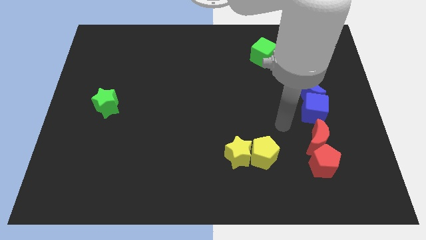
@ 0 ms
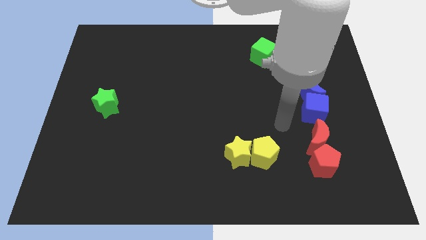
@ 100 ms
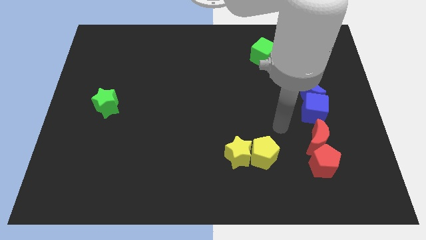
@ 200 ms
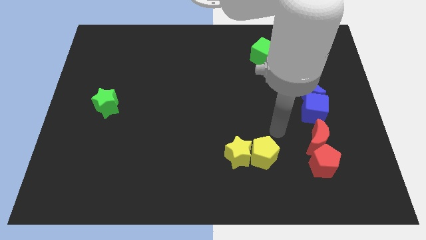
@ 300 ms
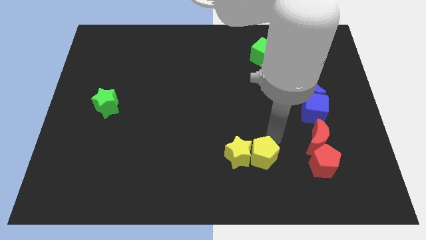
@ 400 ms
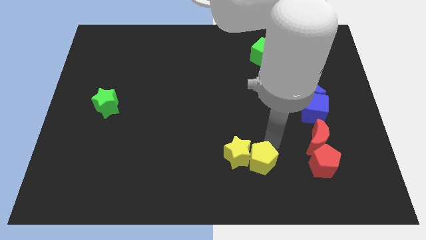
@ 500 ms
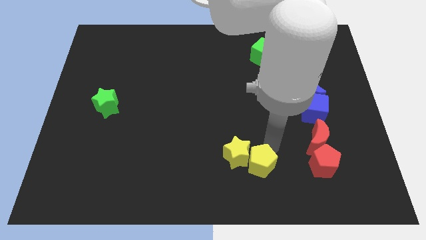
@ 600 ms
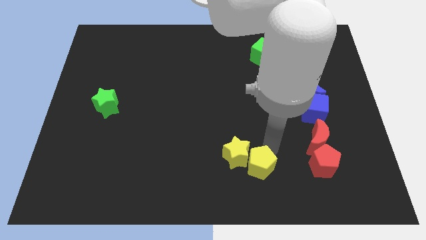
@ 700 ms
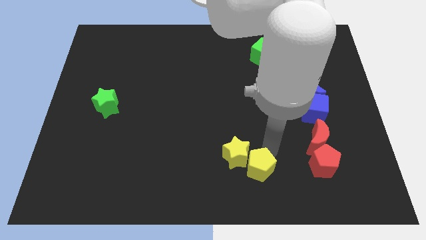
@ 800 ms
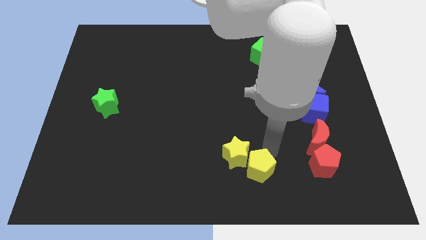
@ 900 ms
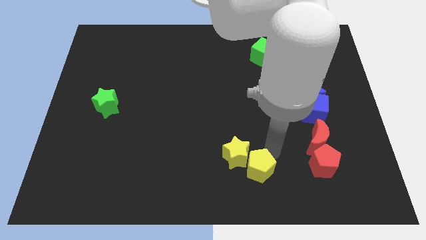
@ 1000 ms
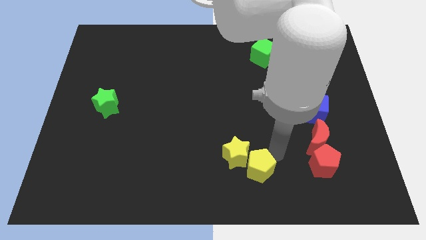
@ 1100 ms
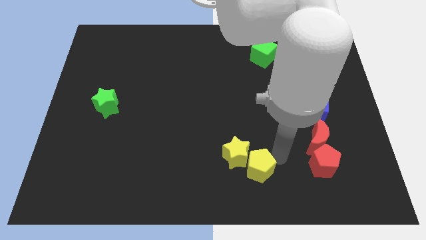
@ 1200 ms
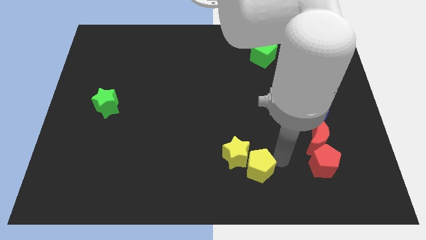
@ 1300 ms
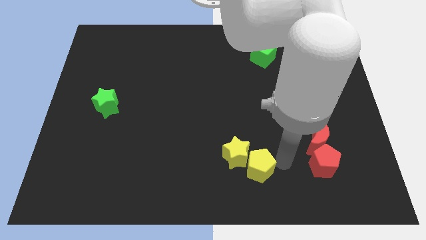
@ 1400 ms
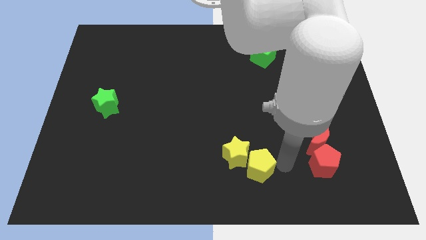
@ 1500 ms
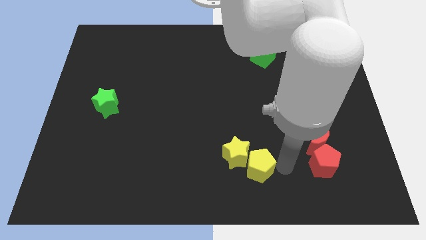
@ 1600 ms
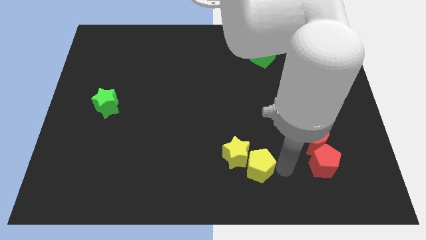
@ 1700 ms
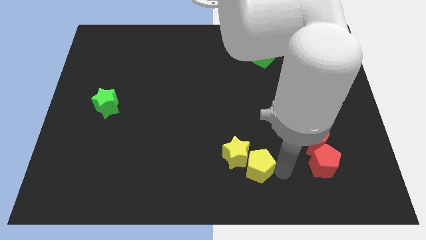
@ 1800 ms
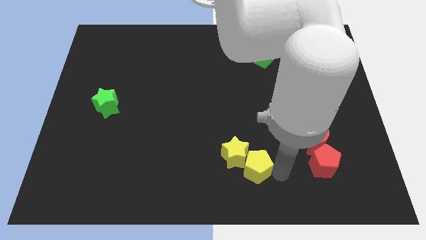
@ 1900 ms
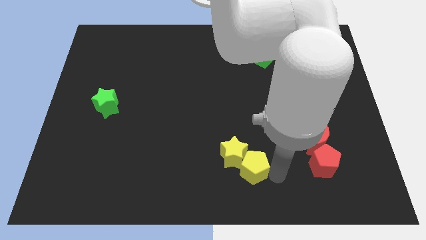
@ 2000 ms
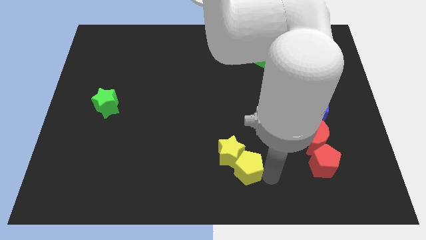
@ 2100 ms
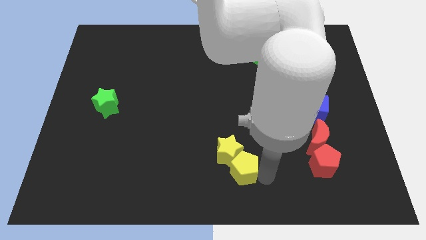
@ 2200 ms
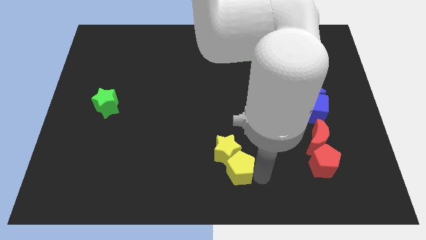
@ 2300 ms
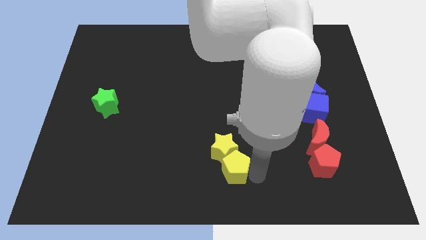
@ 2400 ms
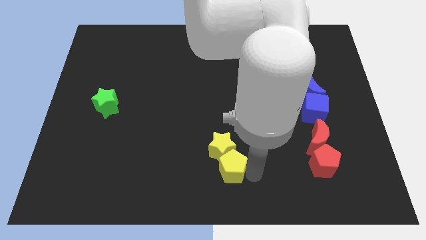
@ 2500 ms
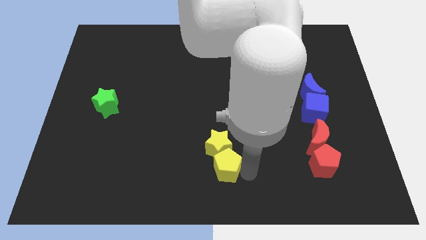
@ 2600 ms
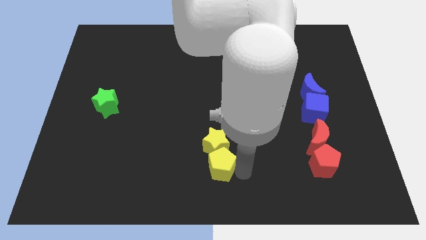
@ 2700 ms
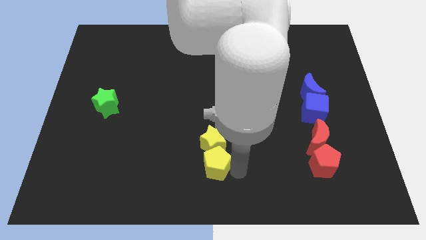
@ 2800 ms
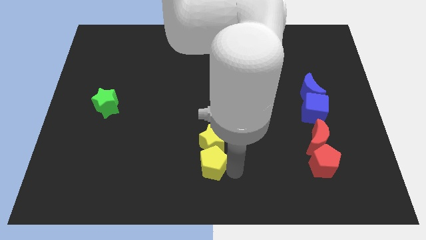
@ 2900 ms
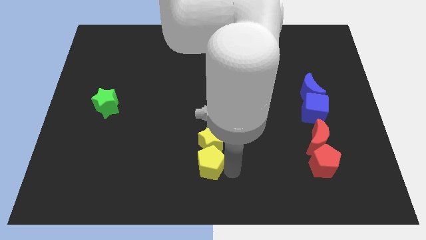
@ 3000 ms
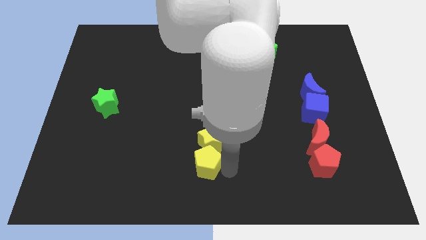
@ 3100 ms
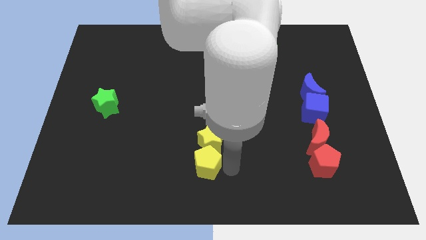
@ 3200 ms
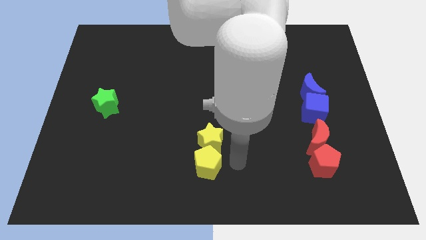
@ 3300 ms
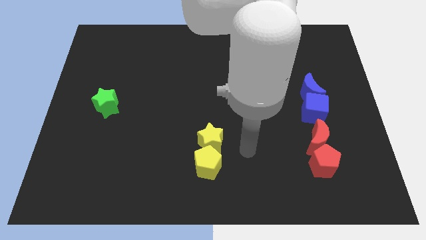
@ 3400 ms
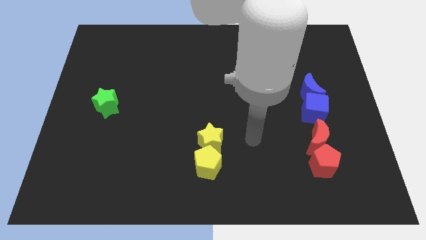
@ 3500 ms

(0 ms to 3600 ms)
push the yellow pentagon into the yellow star

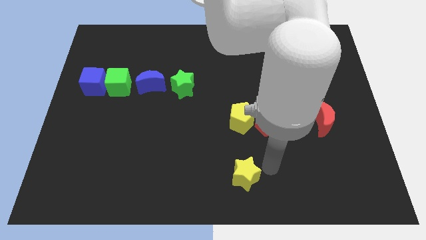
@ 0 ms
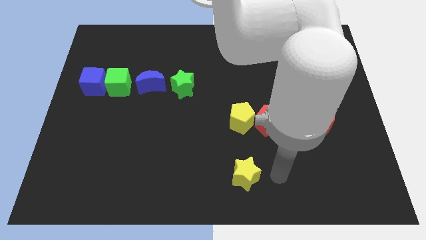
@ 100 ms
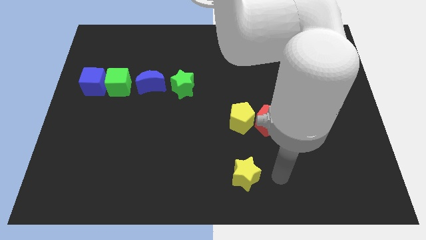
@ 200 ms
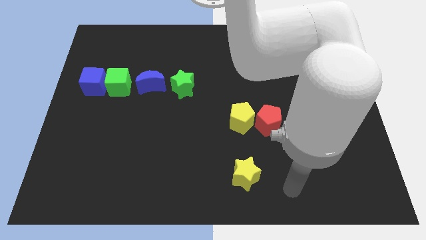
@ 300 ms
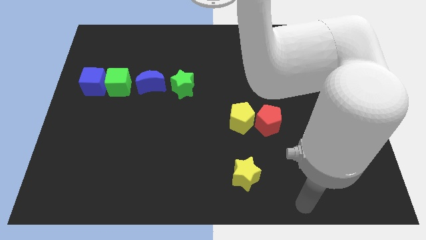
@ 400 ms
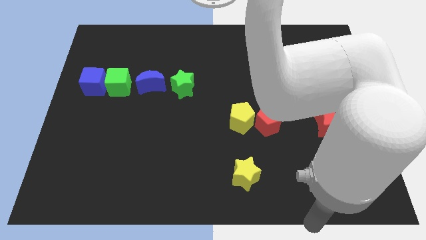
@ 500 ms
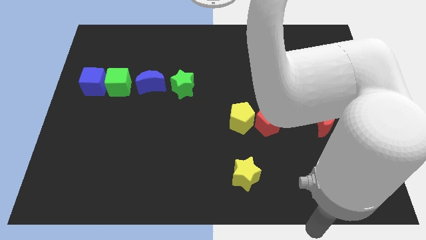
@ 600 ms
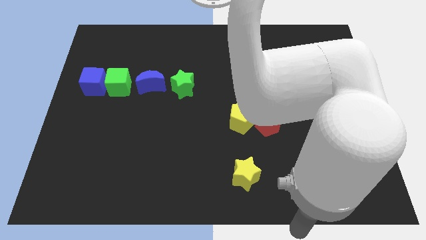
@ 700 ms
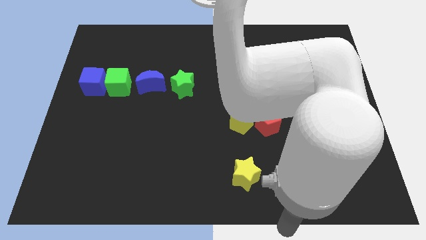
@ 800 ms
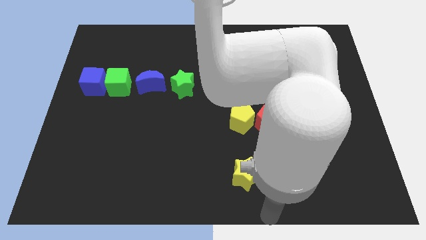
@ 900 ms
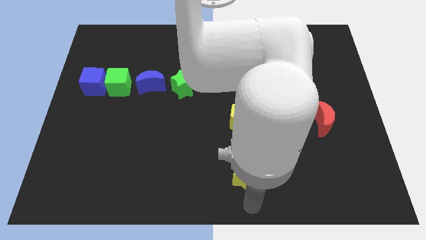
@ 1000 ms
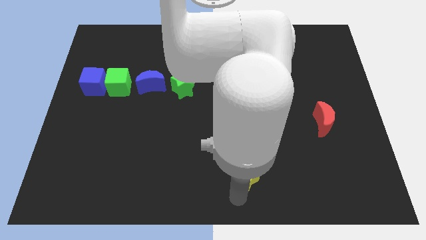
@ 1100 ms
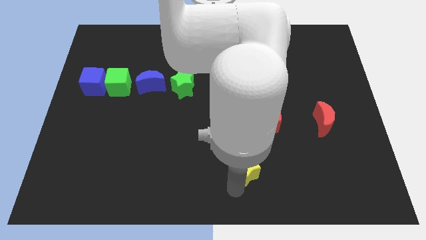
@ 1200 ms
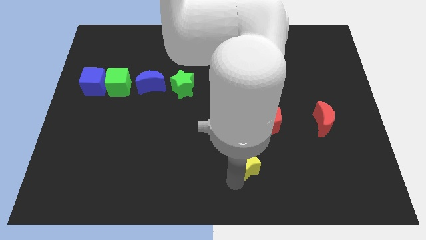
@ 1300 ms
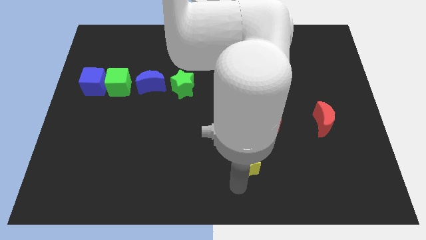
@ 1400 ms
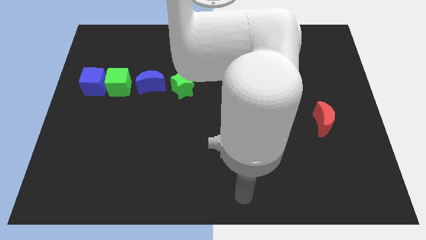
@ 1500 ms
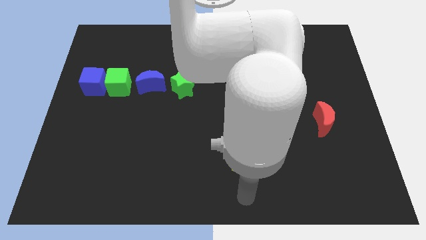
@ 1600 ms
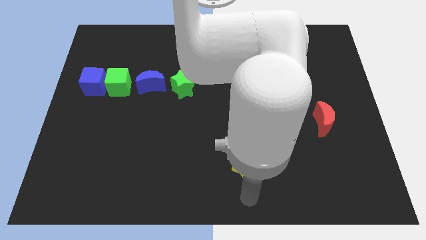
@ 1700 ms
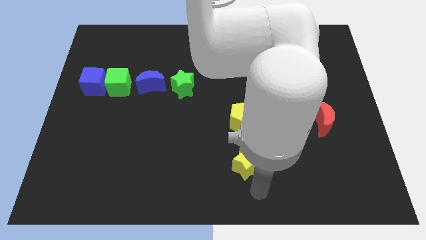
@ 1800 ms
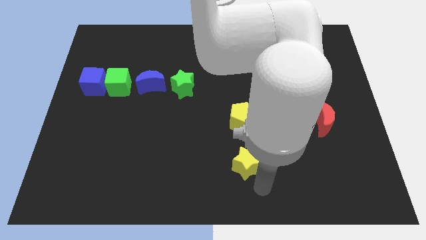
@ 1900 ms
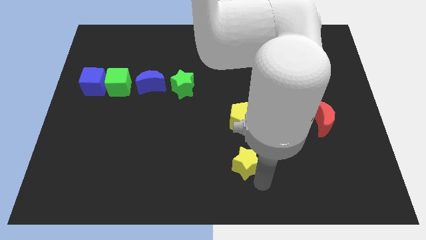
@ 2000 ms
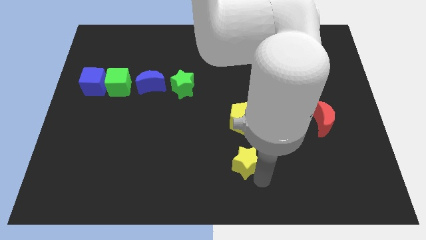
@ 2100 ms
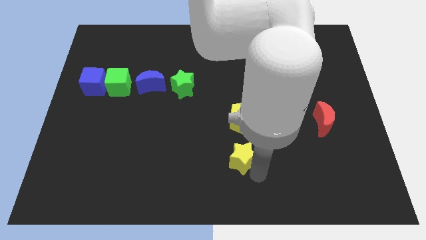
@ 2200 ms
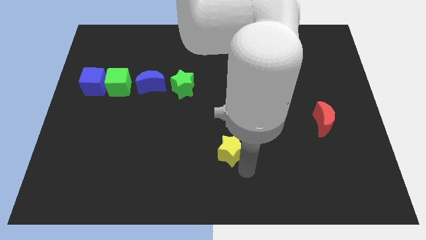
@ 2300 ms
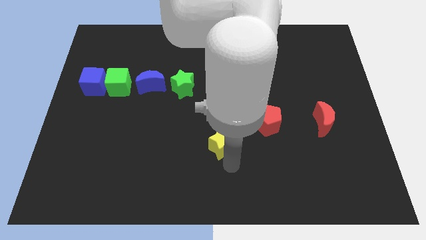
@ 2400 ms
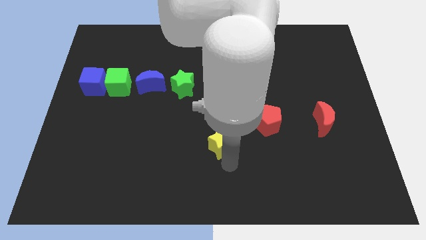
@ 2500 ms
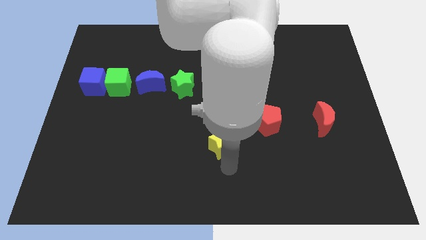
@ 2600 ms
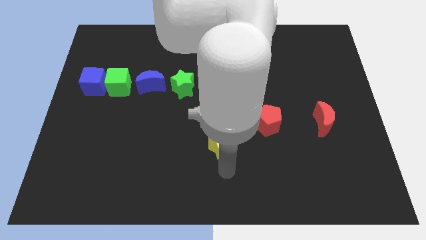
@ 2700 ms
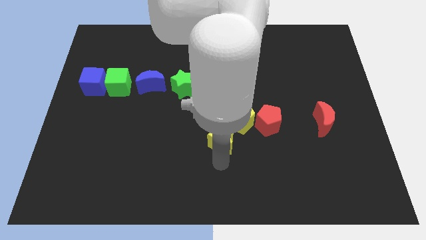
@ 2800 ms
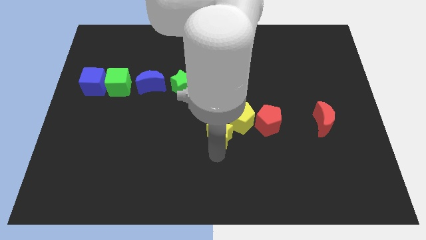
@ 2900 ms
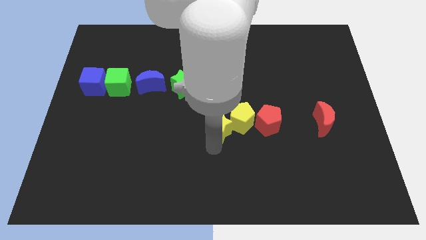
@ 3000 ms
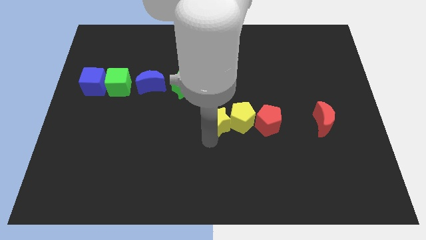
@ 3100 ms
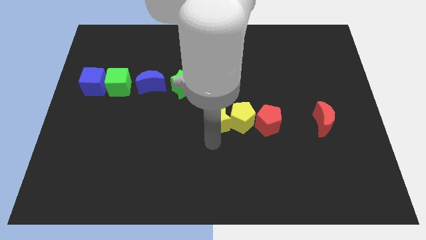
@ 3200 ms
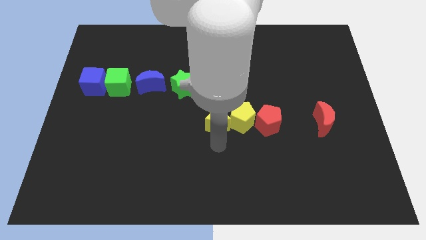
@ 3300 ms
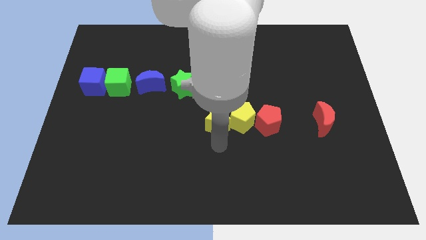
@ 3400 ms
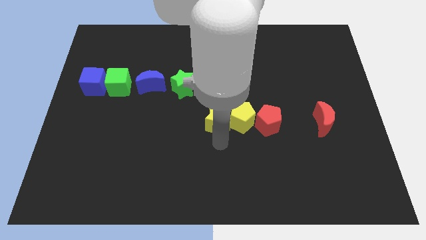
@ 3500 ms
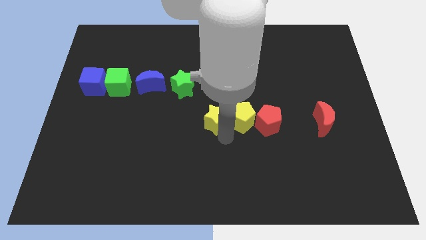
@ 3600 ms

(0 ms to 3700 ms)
push the yellow star close left to the yellow pentagon

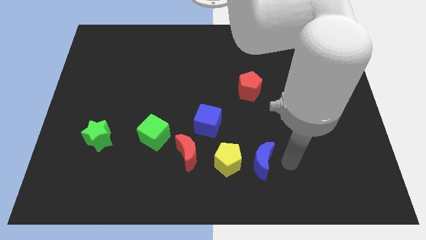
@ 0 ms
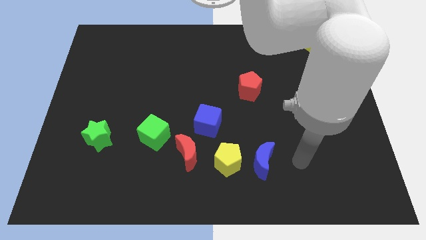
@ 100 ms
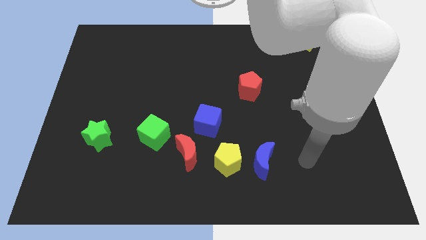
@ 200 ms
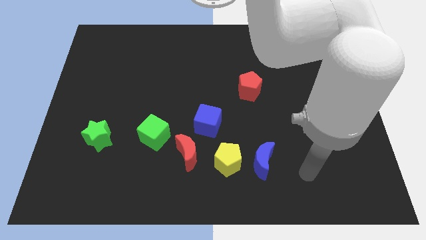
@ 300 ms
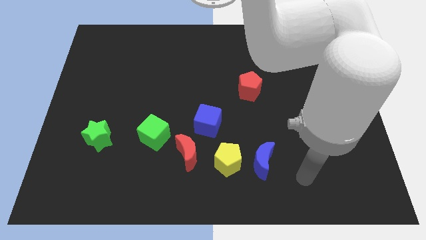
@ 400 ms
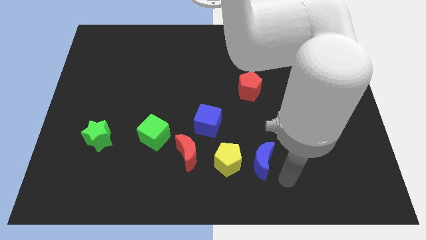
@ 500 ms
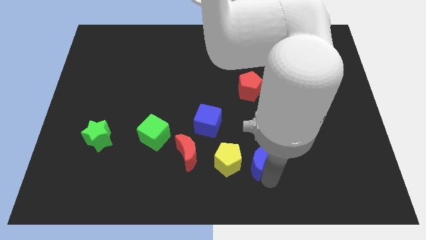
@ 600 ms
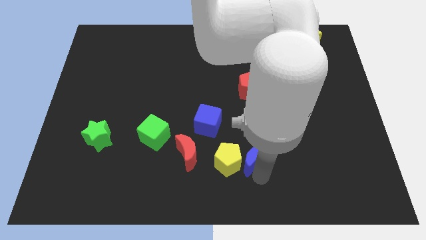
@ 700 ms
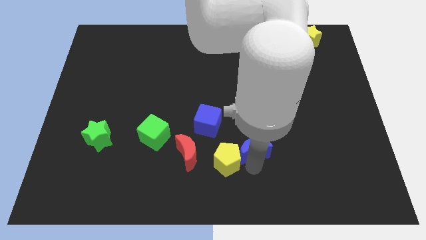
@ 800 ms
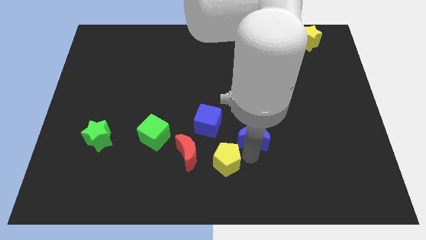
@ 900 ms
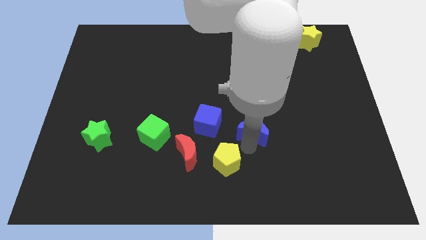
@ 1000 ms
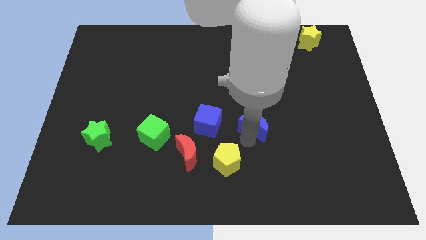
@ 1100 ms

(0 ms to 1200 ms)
push the blue moon to the right of the blue cube

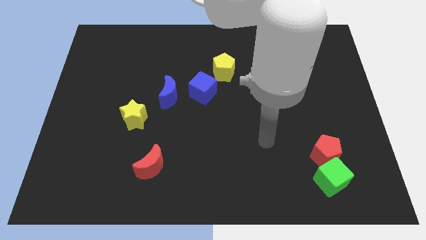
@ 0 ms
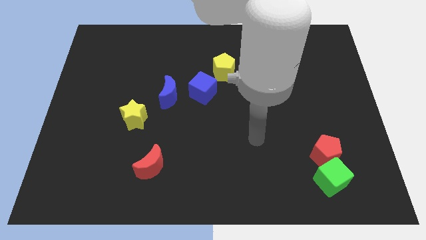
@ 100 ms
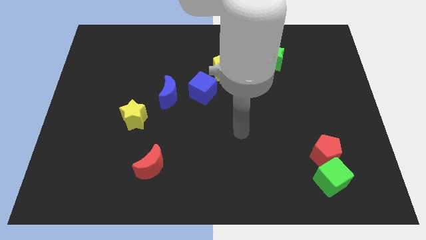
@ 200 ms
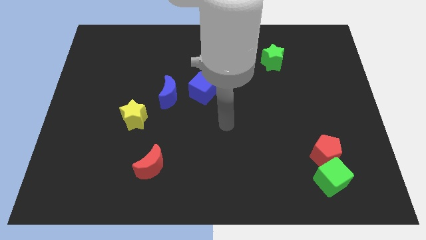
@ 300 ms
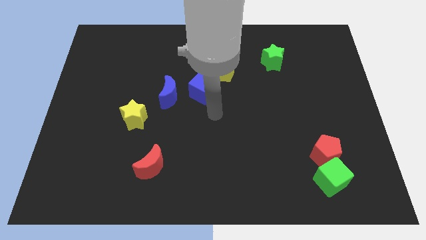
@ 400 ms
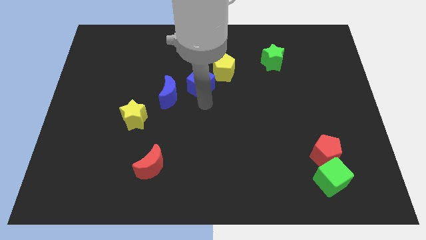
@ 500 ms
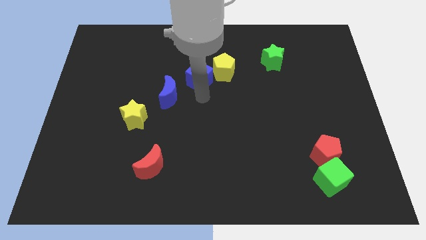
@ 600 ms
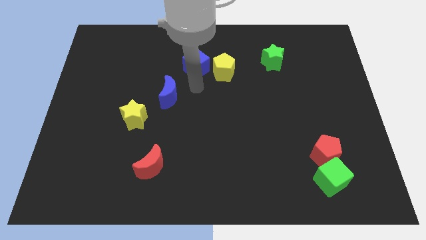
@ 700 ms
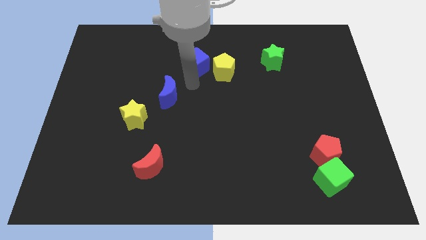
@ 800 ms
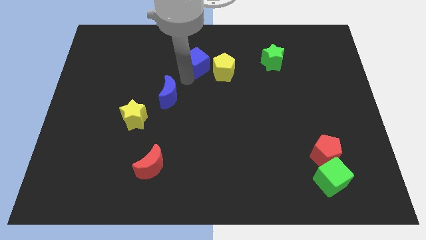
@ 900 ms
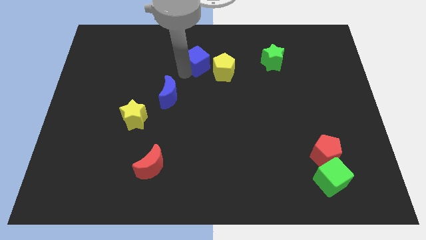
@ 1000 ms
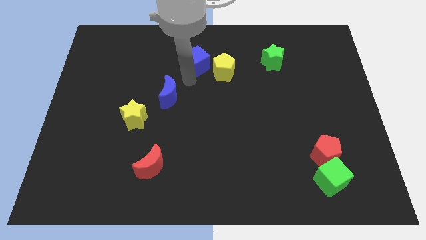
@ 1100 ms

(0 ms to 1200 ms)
move the blue cube slightly up
